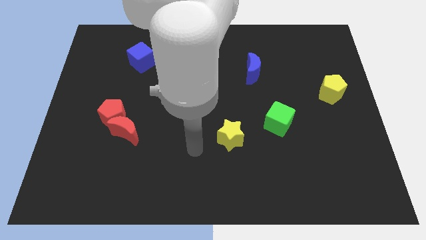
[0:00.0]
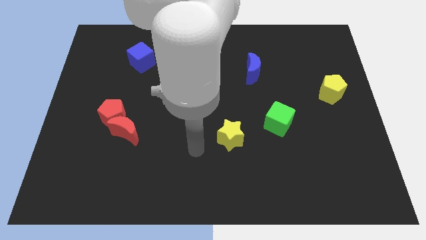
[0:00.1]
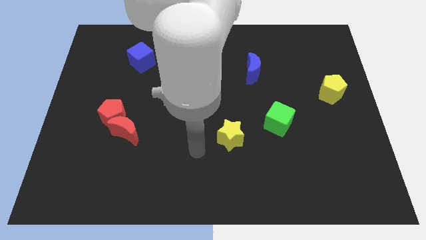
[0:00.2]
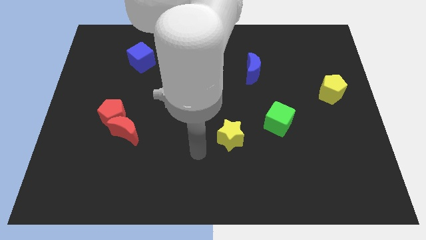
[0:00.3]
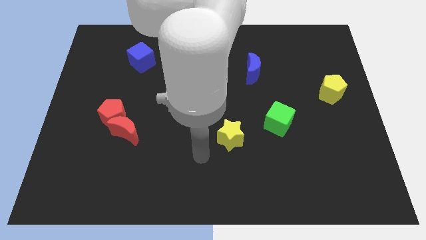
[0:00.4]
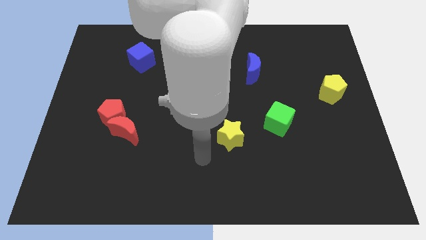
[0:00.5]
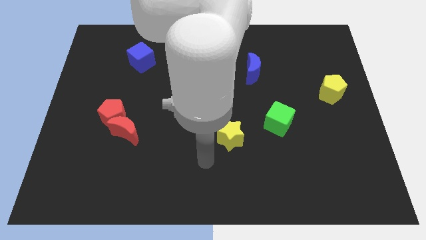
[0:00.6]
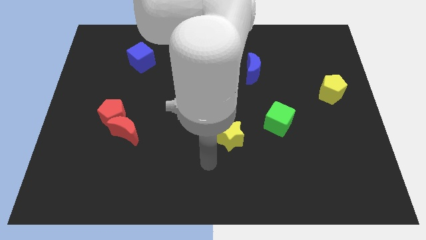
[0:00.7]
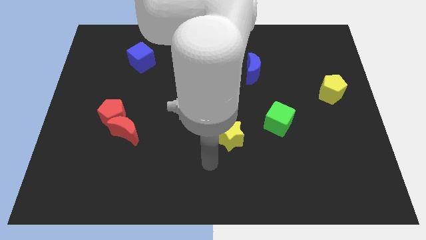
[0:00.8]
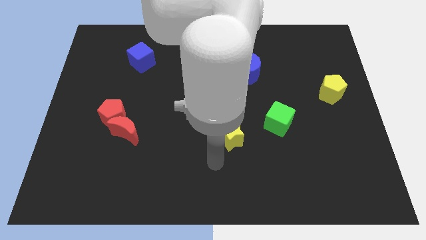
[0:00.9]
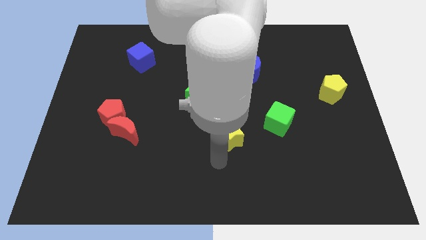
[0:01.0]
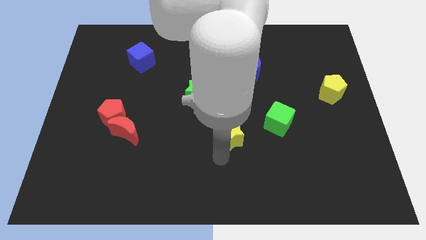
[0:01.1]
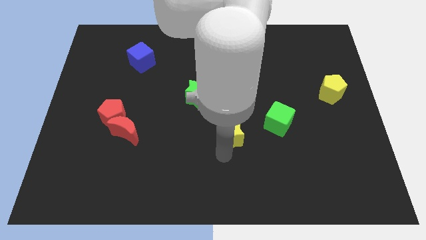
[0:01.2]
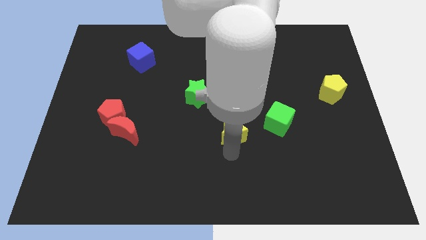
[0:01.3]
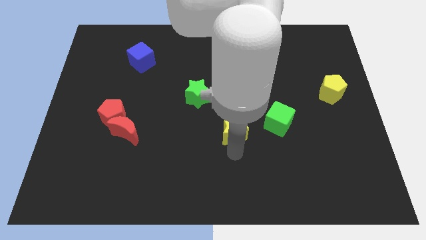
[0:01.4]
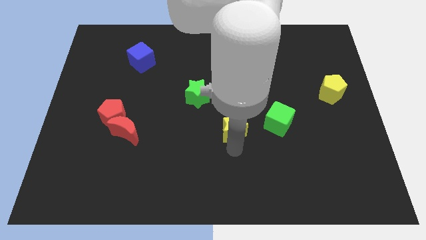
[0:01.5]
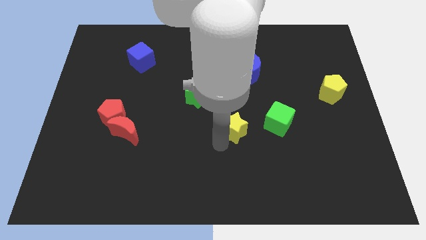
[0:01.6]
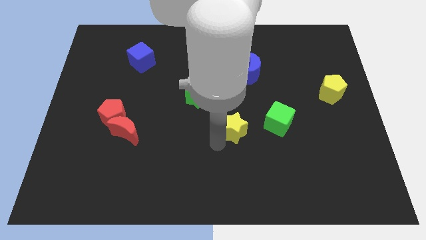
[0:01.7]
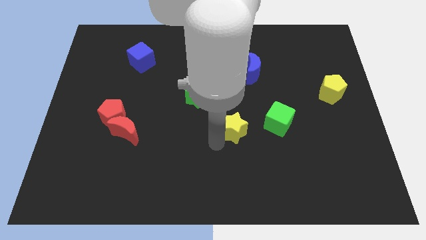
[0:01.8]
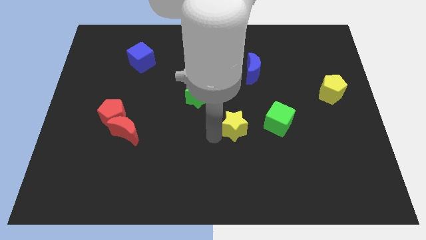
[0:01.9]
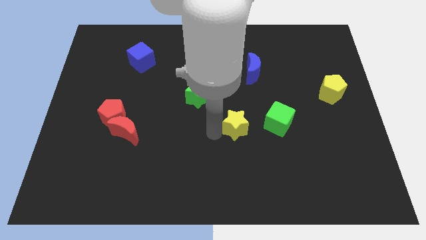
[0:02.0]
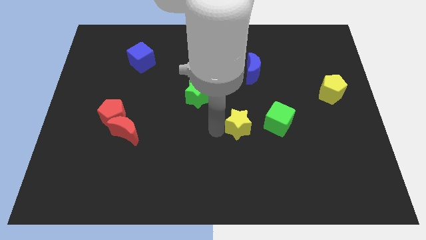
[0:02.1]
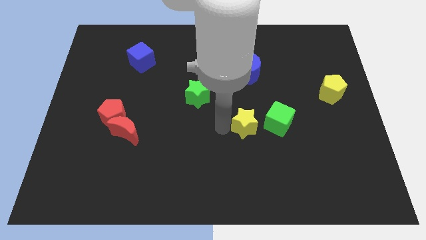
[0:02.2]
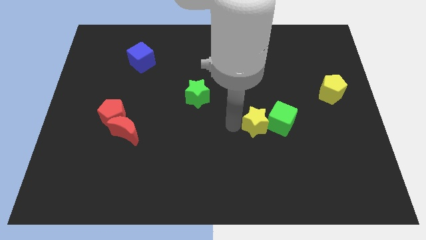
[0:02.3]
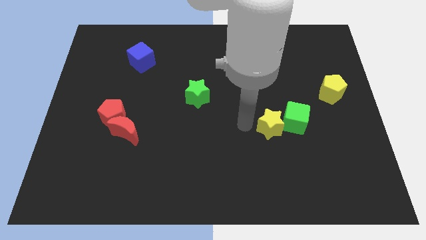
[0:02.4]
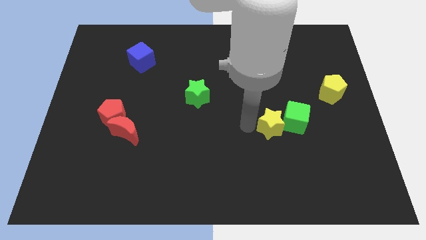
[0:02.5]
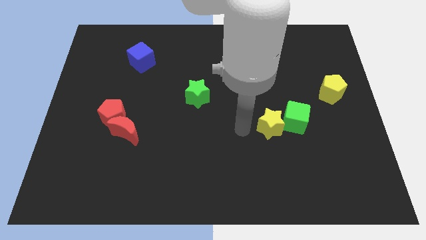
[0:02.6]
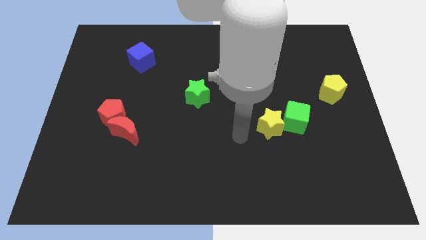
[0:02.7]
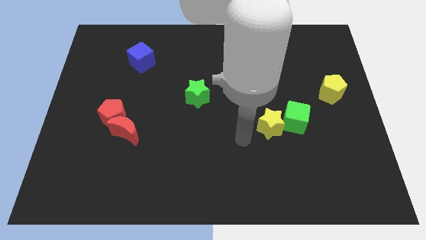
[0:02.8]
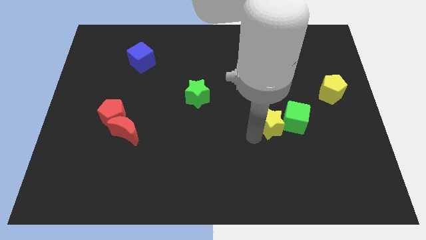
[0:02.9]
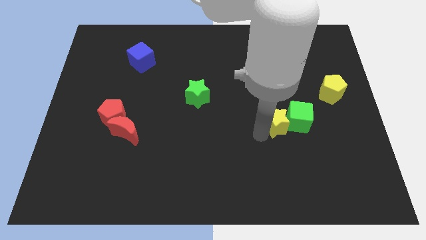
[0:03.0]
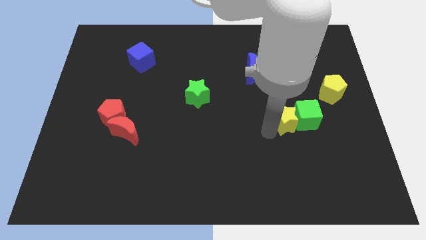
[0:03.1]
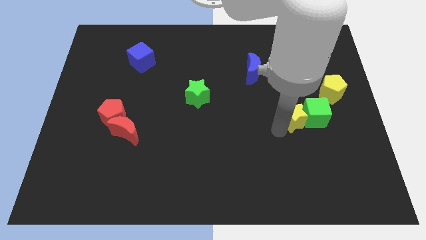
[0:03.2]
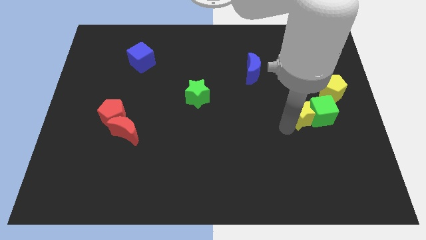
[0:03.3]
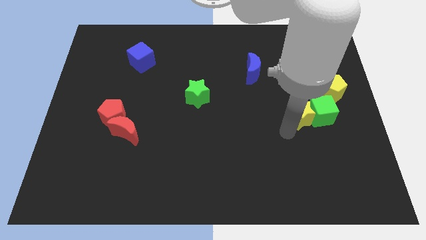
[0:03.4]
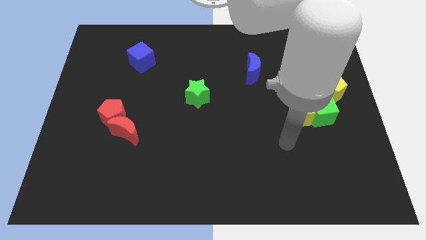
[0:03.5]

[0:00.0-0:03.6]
move the yellow star into the green cube

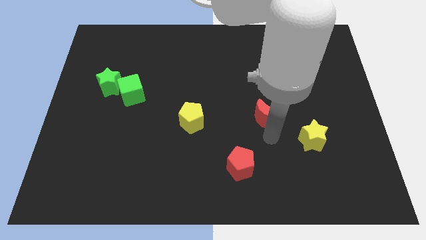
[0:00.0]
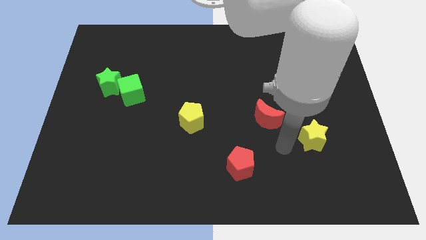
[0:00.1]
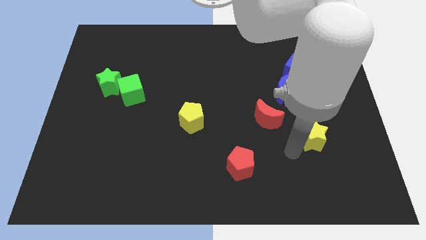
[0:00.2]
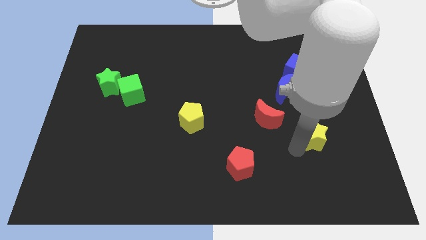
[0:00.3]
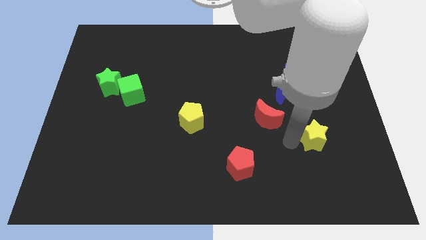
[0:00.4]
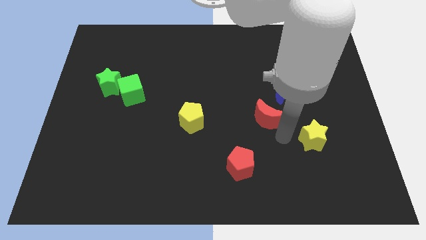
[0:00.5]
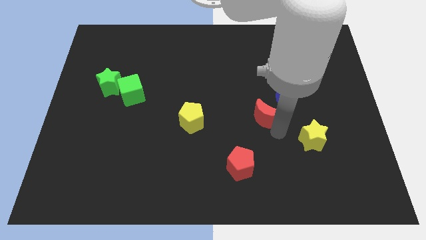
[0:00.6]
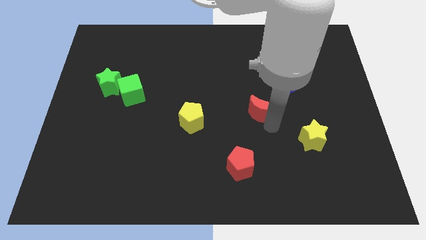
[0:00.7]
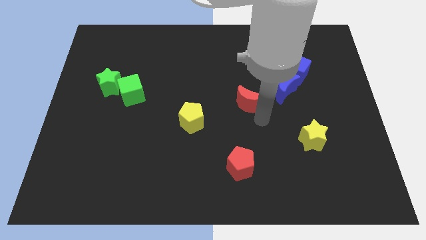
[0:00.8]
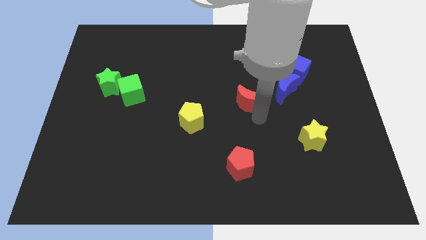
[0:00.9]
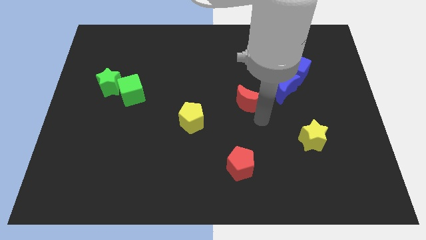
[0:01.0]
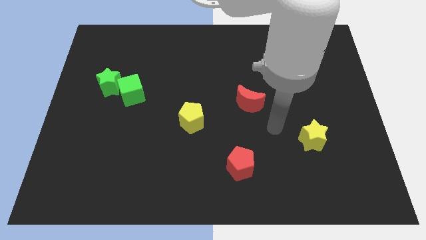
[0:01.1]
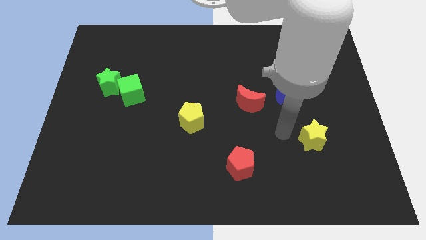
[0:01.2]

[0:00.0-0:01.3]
move the red crescent to the left of the blue crescent

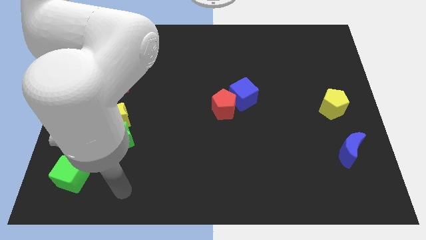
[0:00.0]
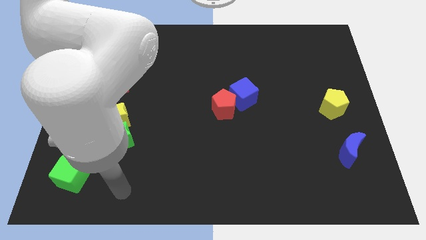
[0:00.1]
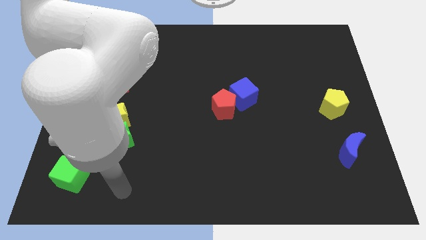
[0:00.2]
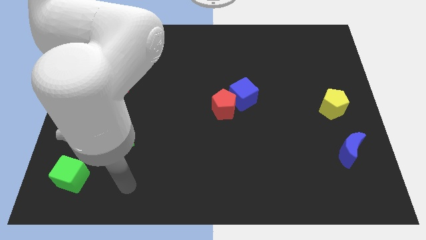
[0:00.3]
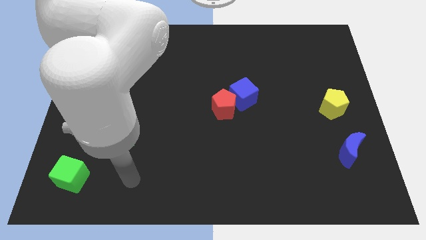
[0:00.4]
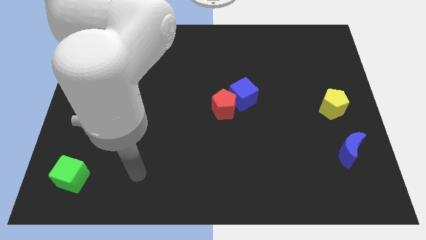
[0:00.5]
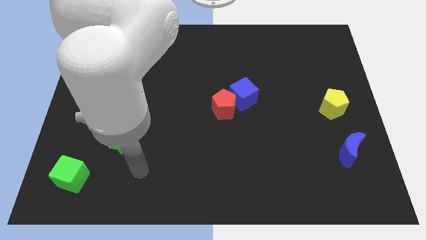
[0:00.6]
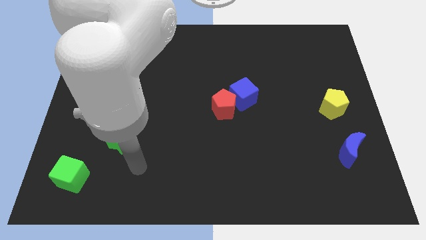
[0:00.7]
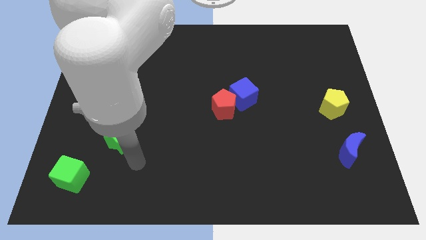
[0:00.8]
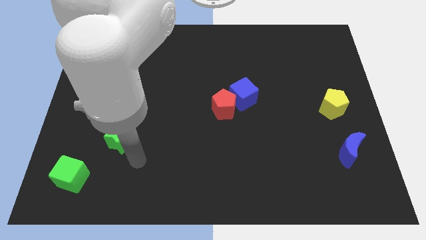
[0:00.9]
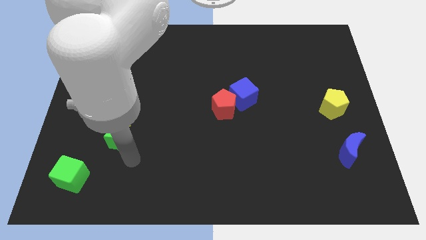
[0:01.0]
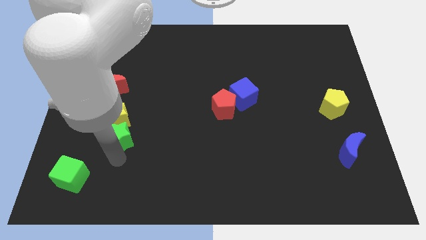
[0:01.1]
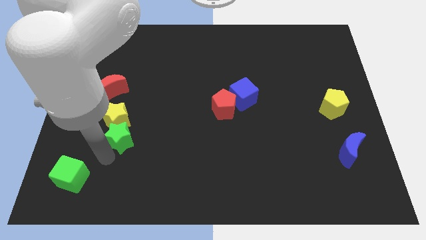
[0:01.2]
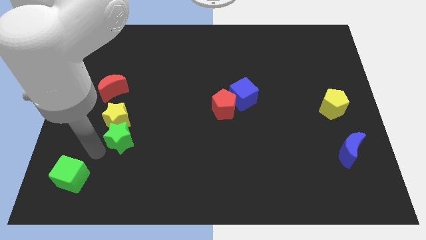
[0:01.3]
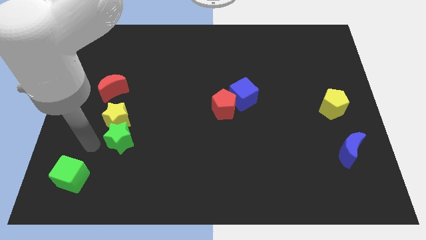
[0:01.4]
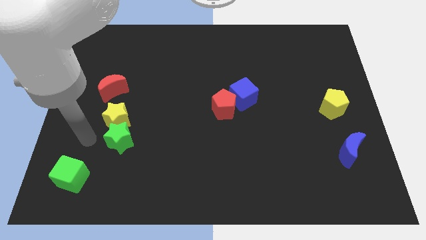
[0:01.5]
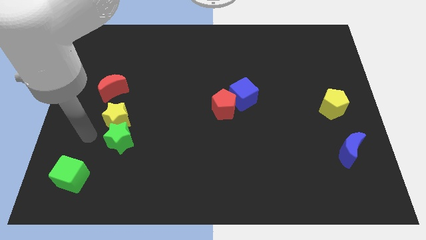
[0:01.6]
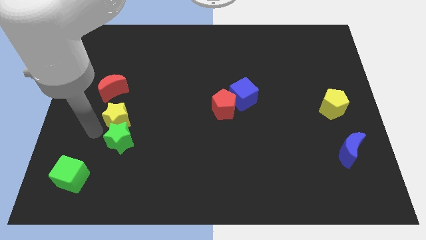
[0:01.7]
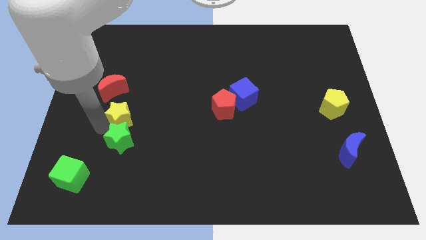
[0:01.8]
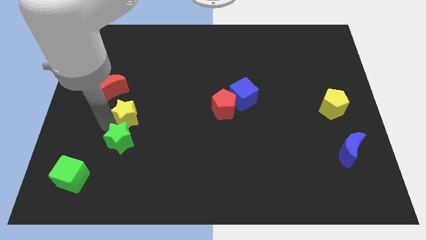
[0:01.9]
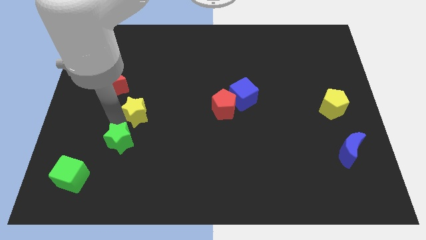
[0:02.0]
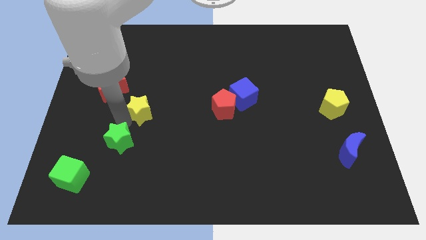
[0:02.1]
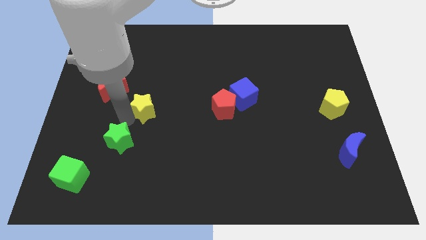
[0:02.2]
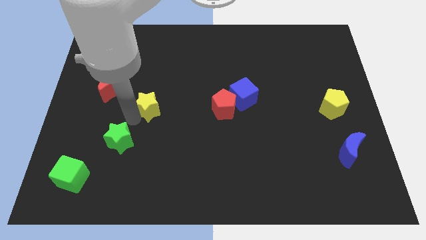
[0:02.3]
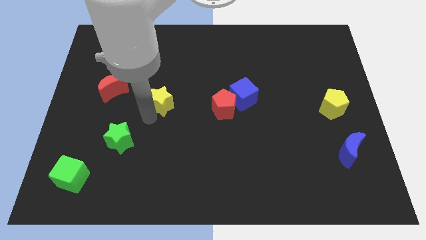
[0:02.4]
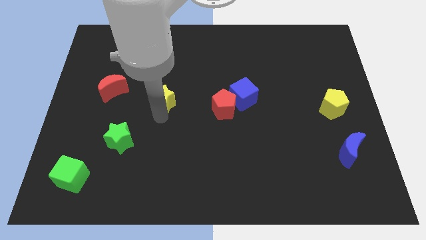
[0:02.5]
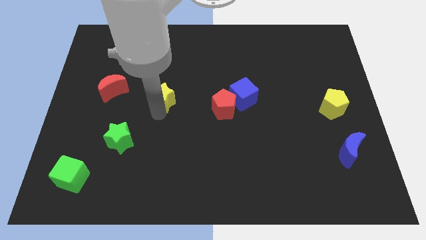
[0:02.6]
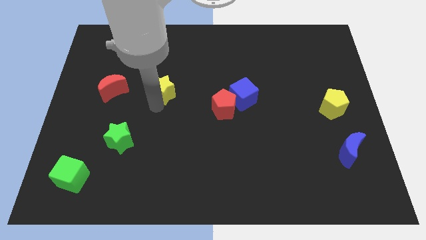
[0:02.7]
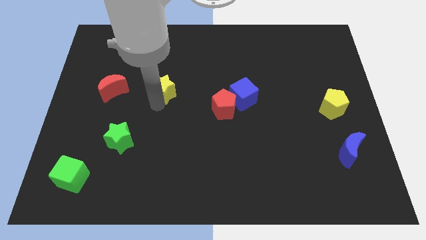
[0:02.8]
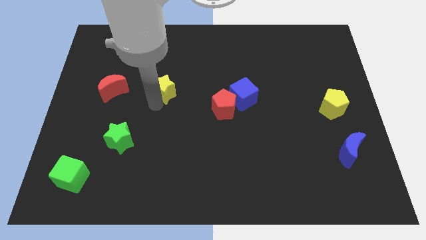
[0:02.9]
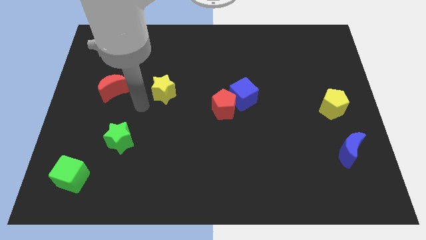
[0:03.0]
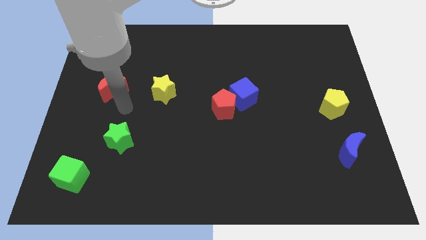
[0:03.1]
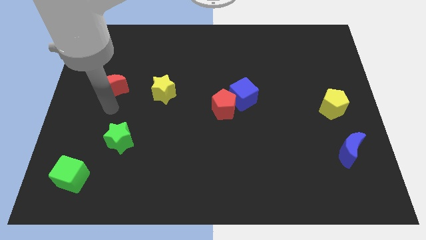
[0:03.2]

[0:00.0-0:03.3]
move the yellow star diagonal to the right of the red crescent

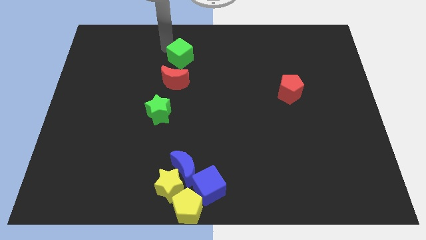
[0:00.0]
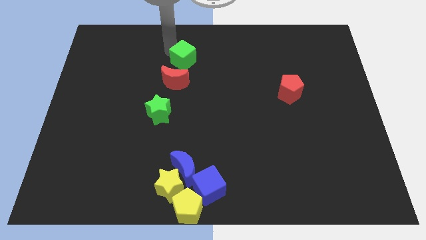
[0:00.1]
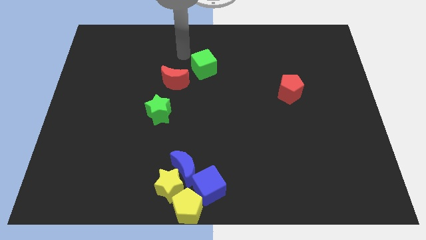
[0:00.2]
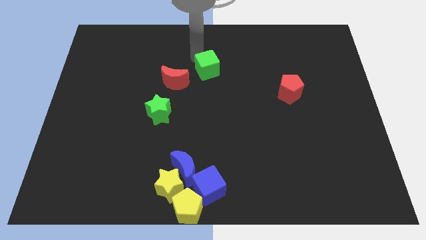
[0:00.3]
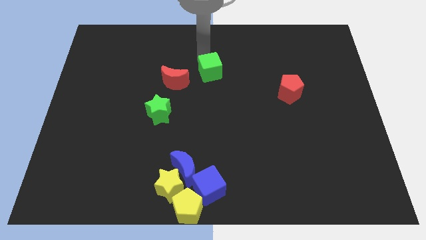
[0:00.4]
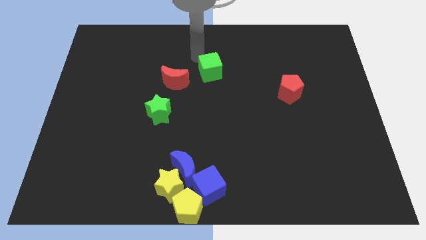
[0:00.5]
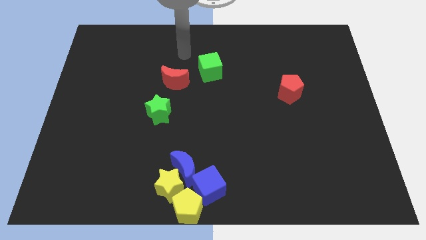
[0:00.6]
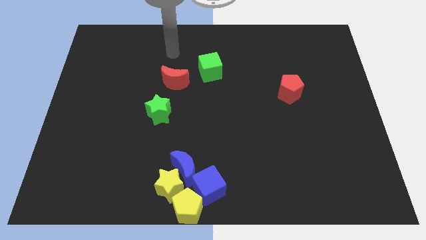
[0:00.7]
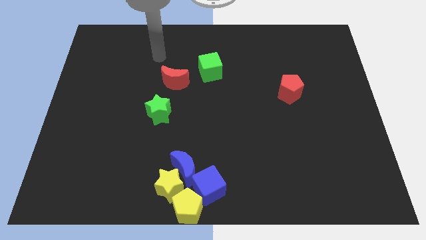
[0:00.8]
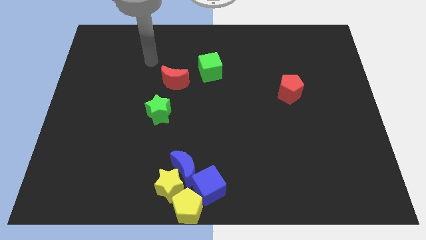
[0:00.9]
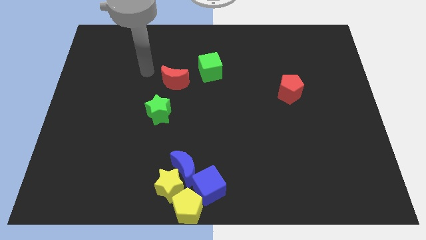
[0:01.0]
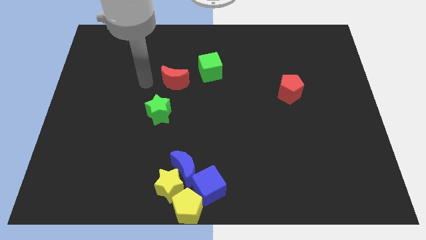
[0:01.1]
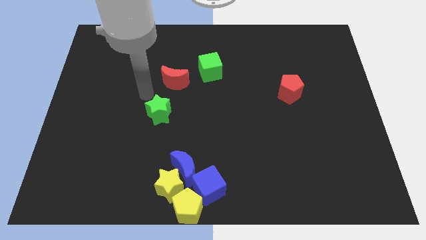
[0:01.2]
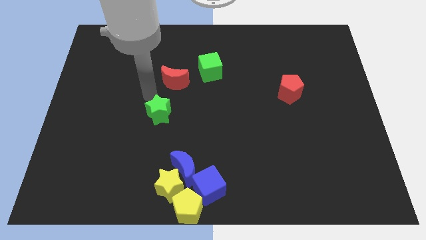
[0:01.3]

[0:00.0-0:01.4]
put the green cube diagonally top right to the red moon
